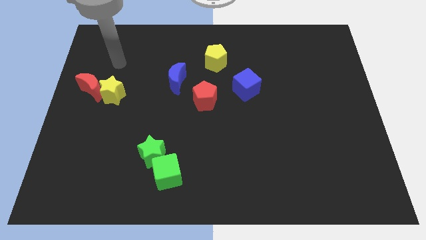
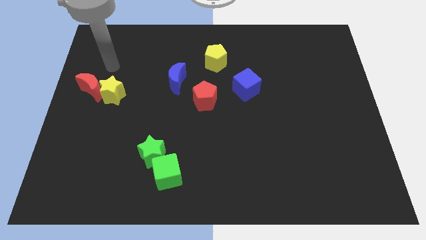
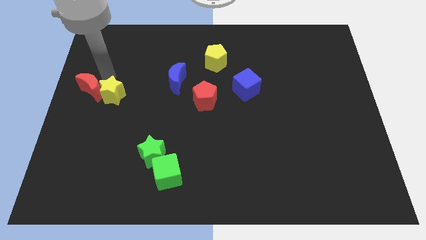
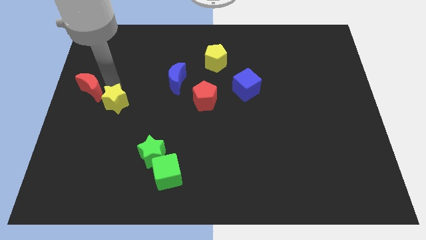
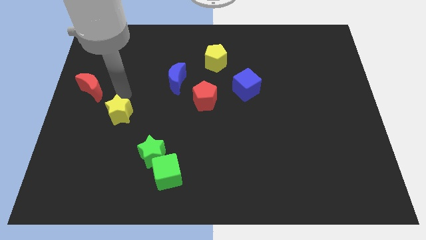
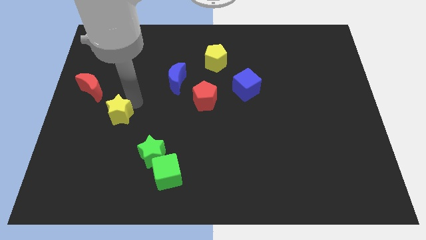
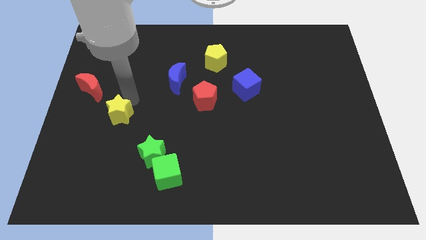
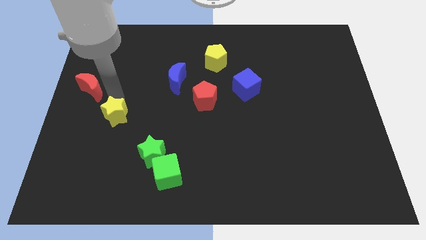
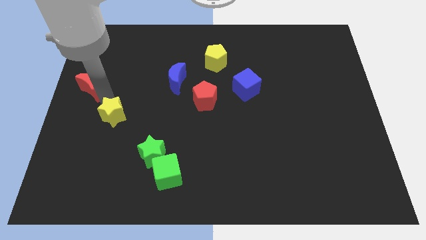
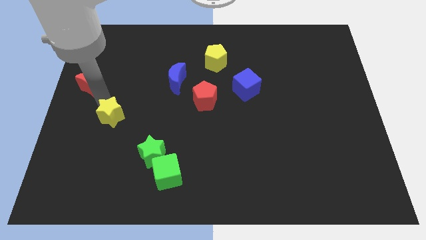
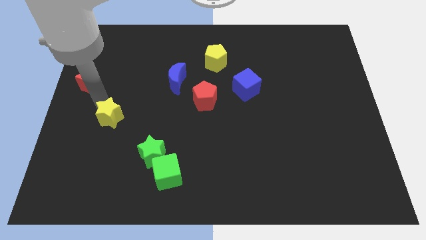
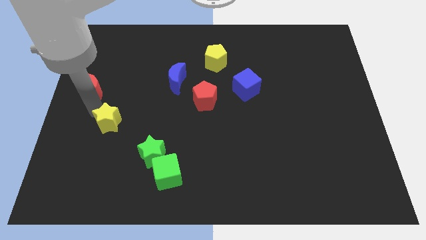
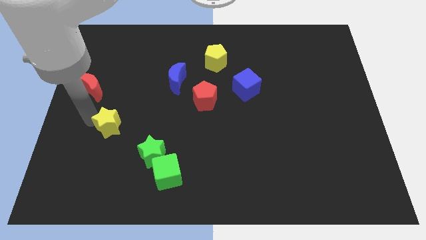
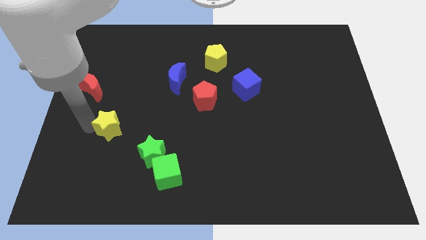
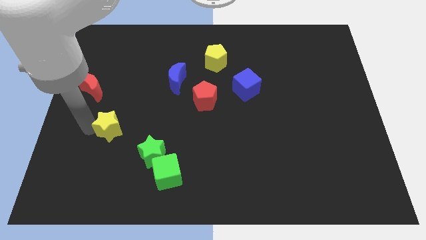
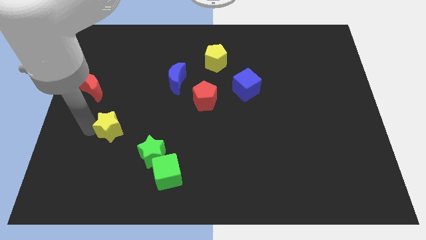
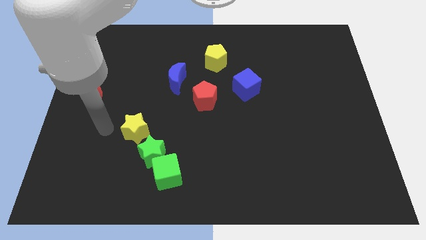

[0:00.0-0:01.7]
move the yellow star towards the green star

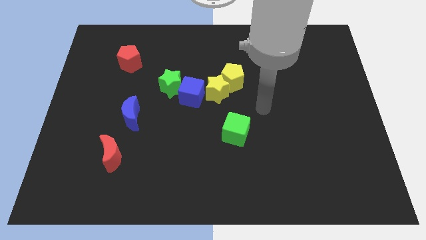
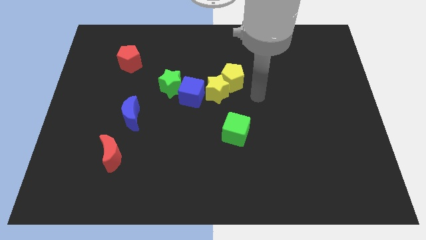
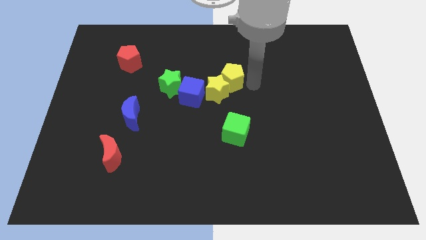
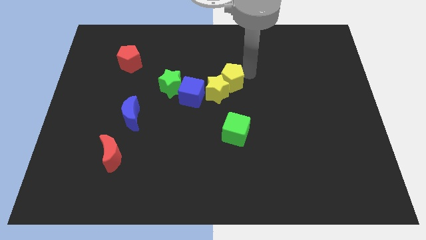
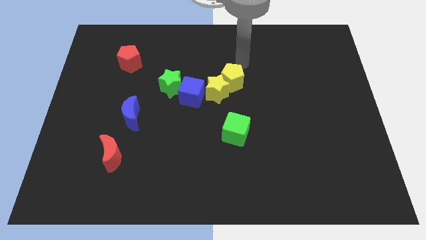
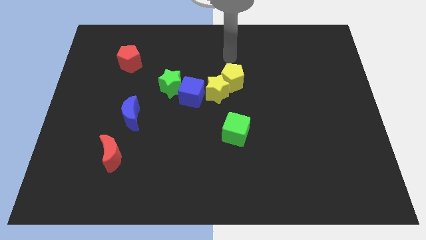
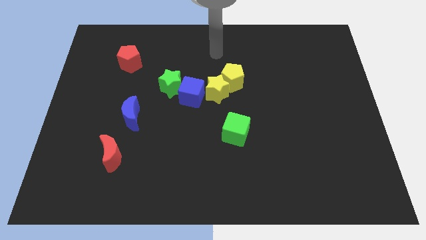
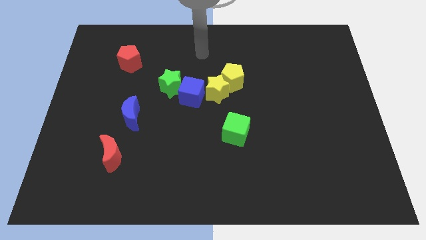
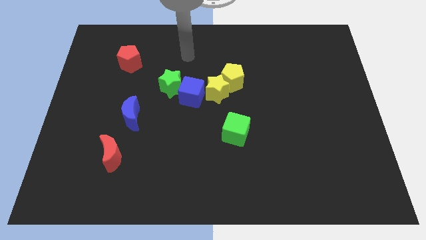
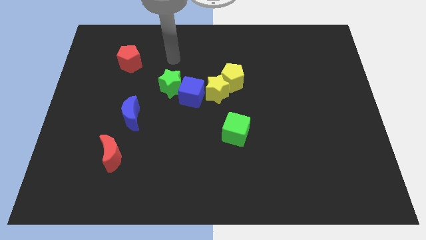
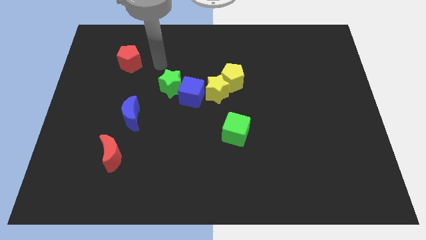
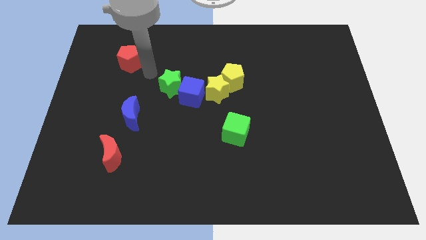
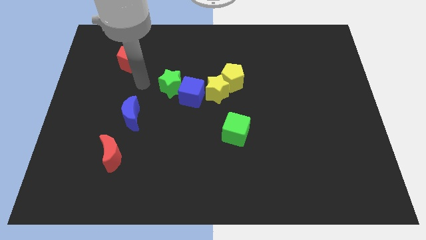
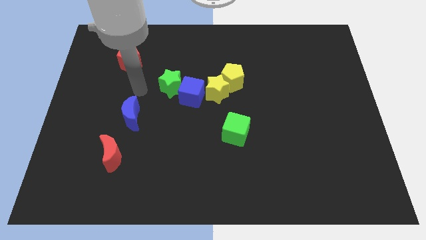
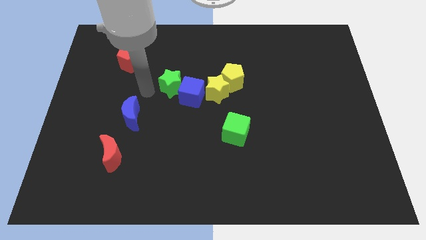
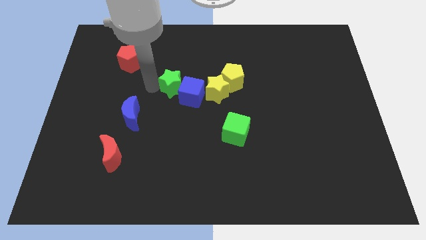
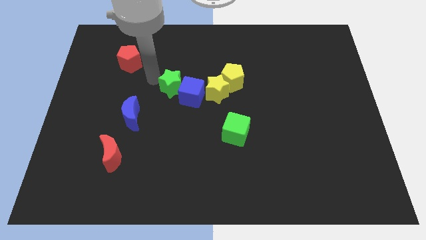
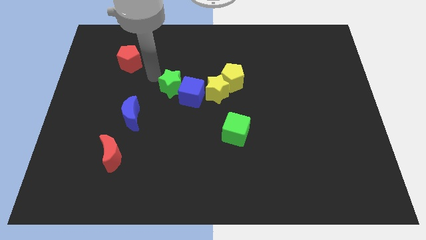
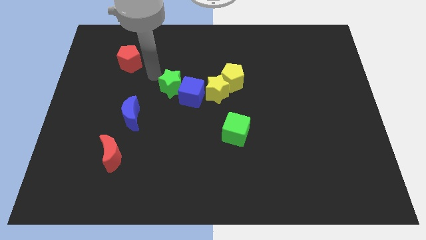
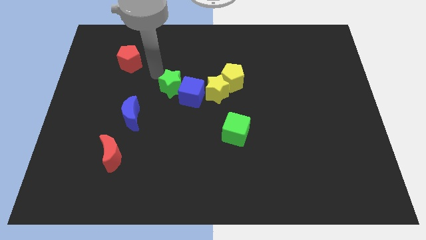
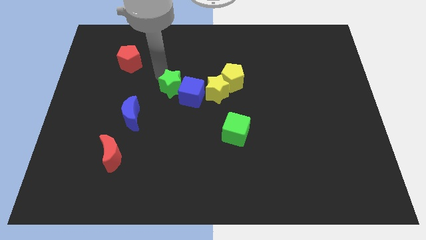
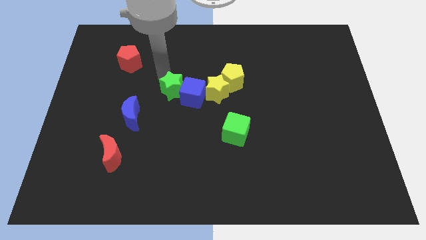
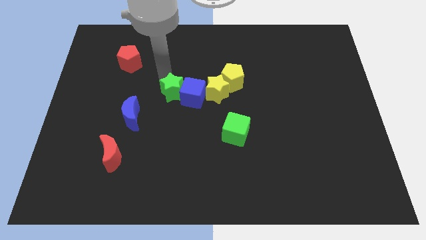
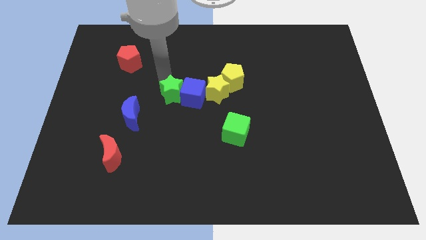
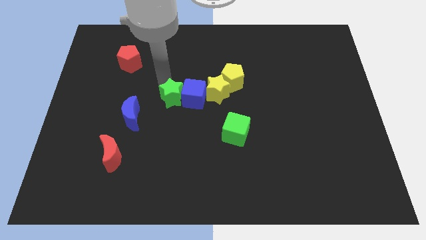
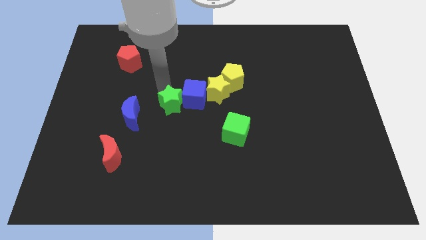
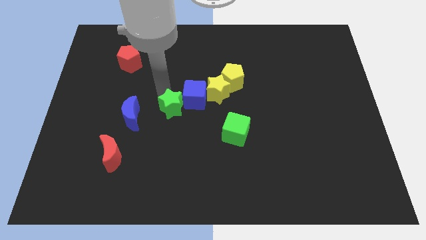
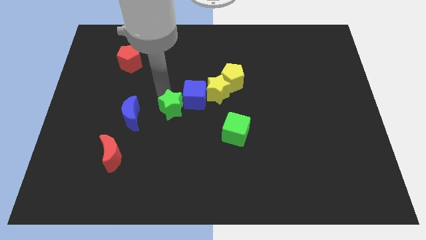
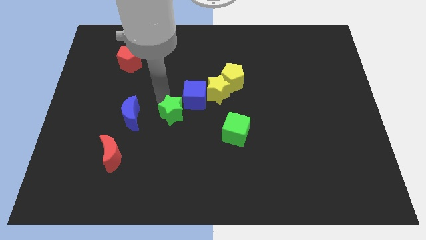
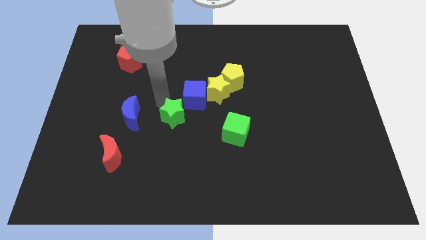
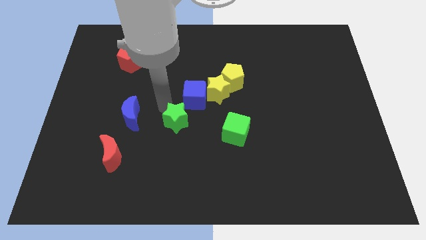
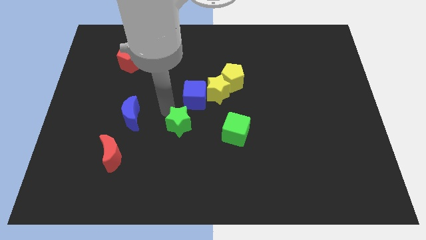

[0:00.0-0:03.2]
place the green star in between the green cube and blue moon

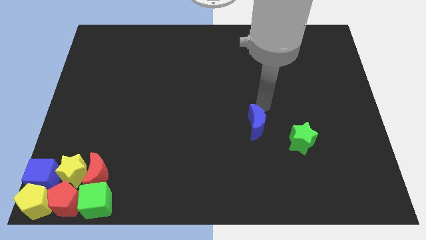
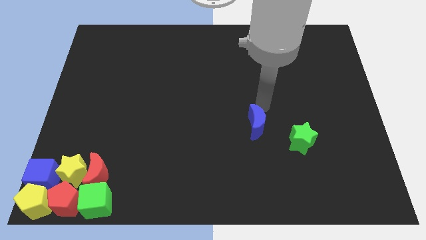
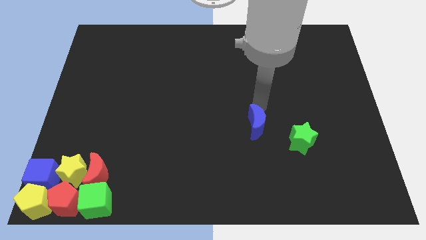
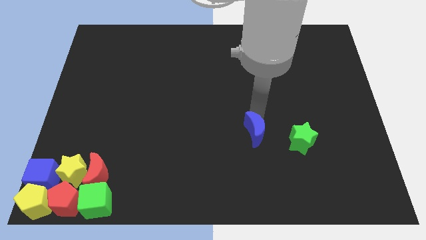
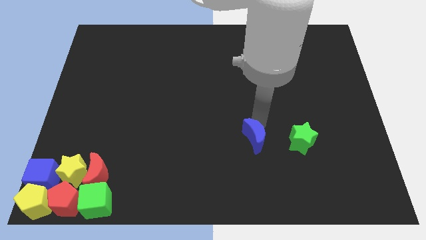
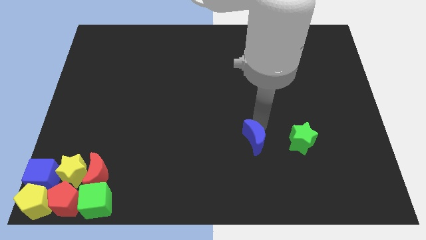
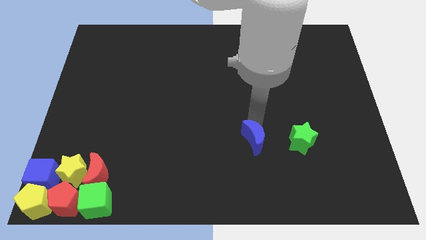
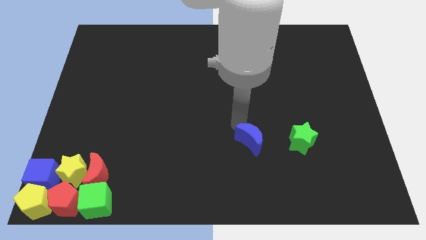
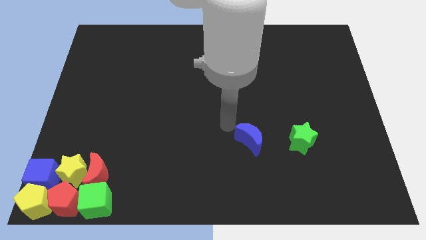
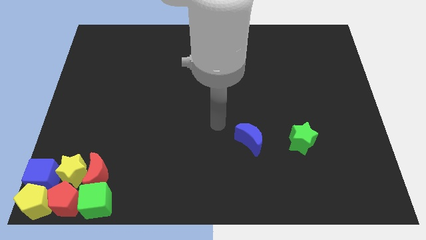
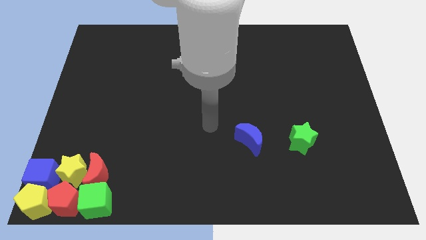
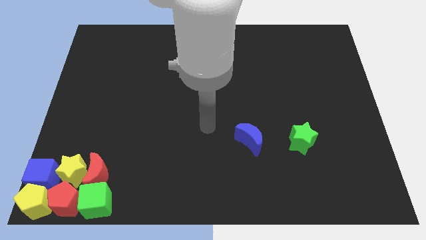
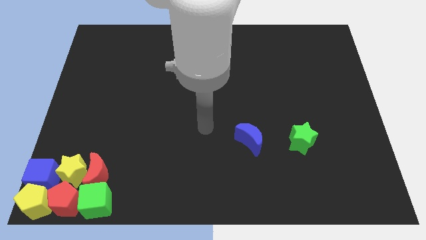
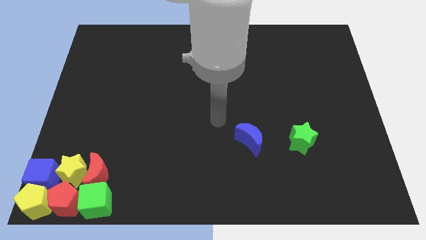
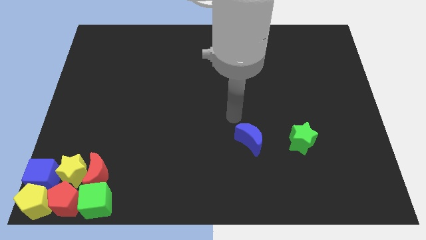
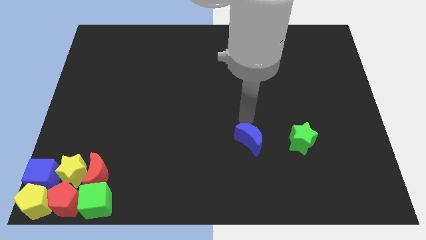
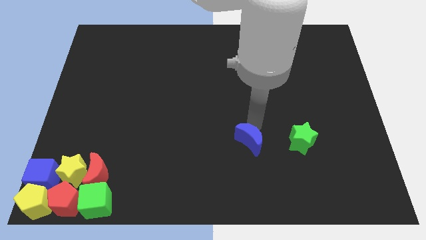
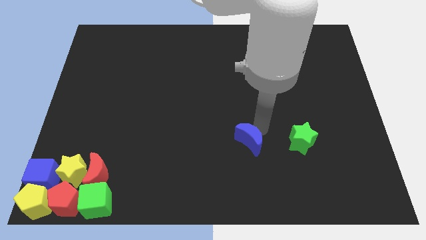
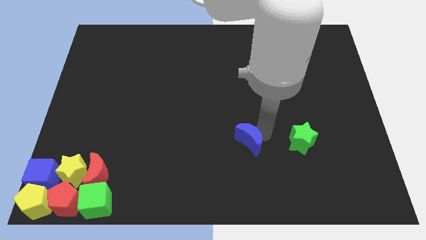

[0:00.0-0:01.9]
push the blue moon towards bottom center

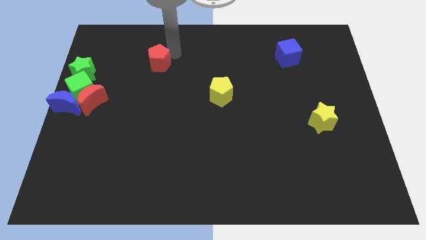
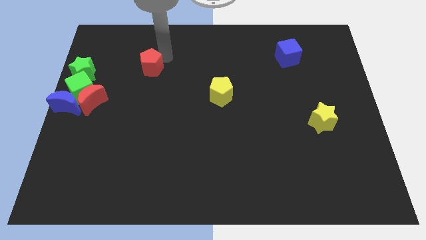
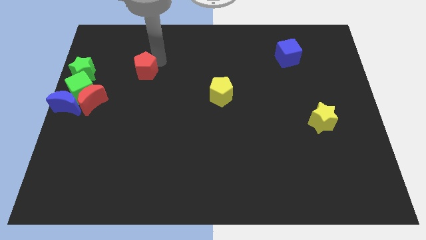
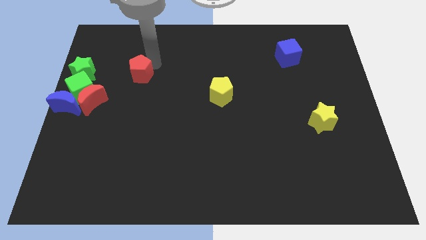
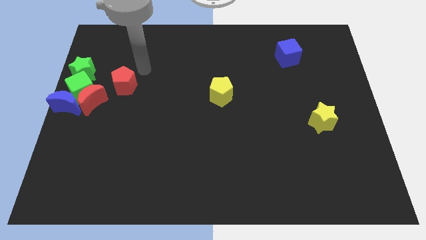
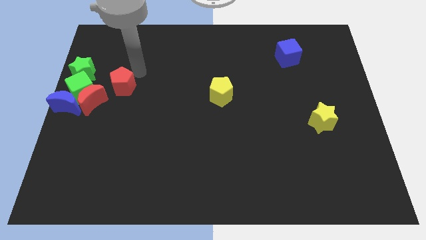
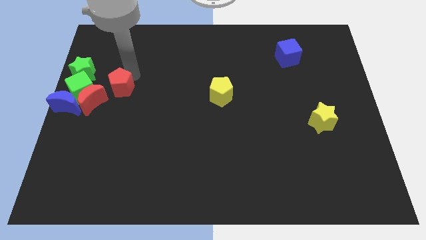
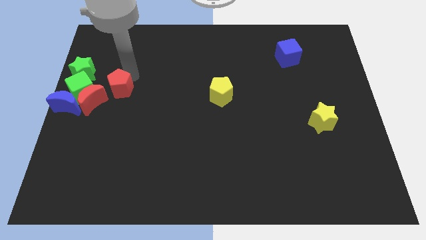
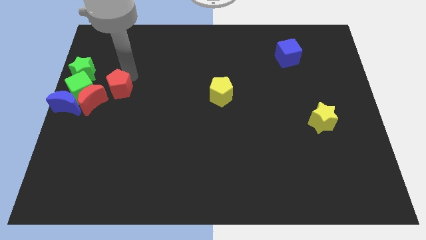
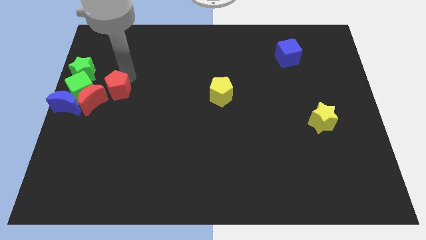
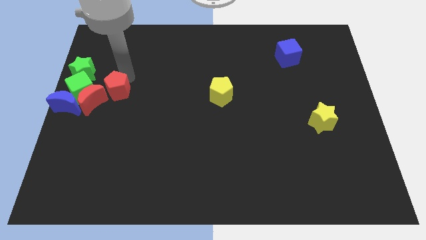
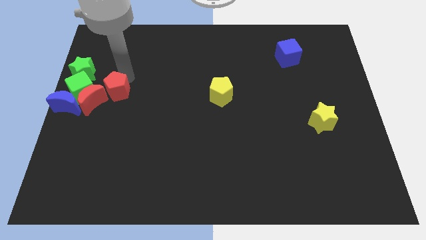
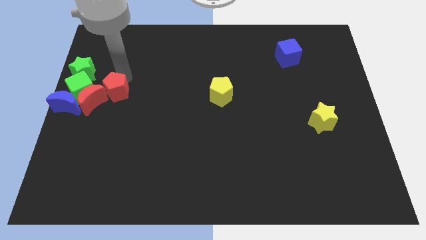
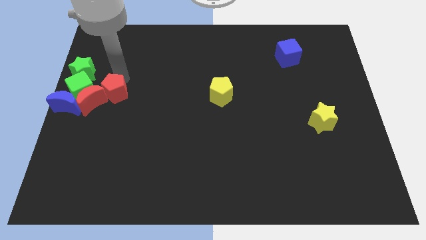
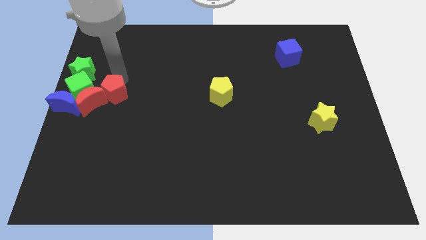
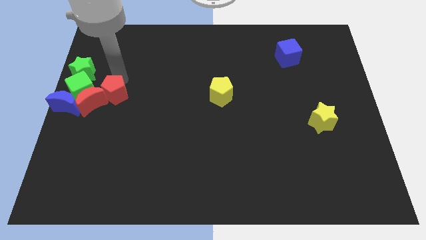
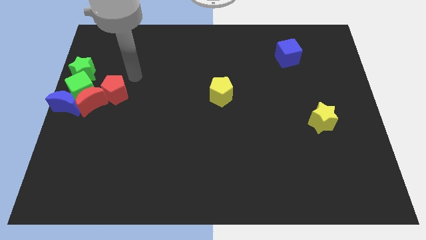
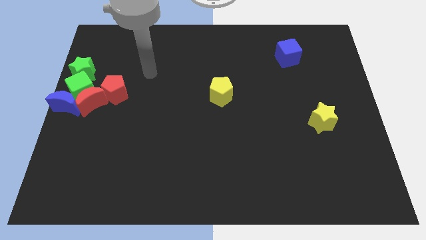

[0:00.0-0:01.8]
push the red pentagon into the top right of the red moon

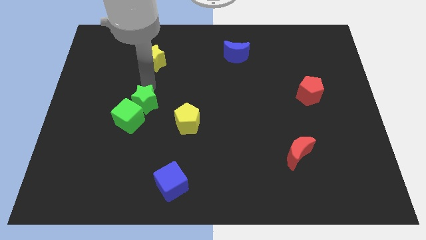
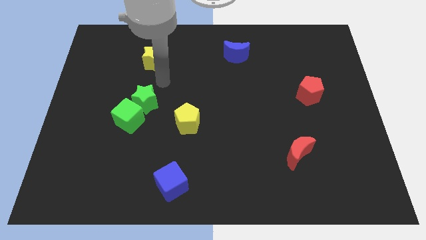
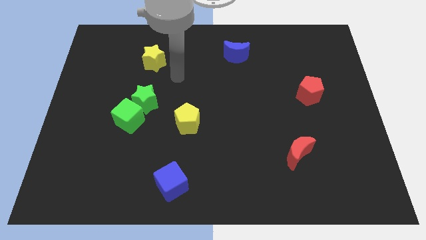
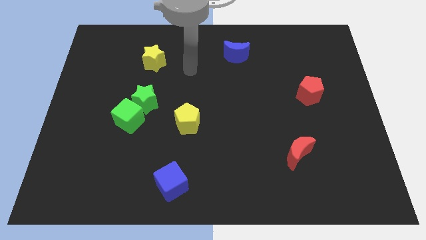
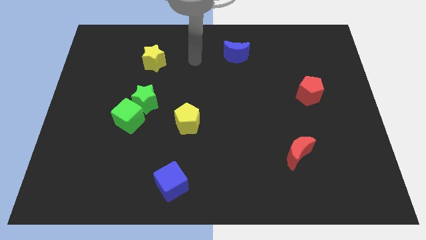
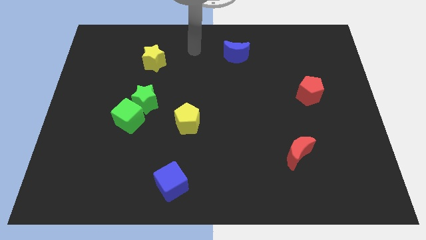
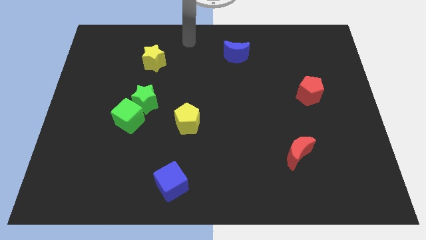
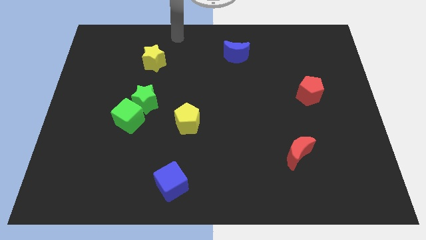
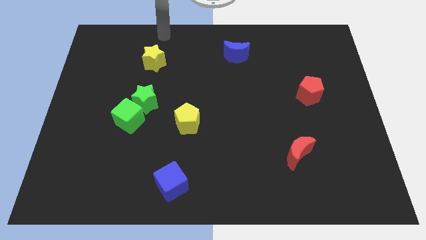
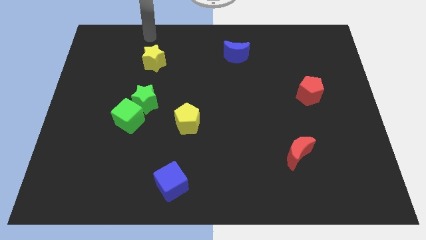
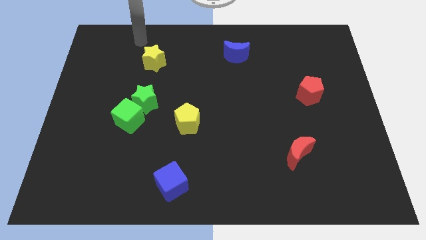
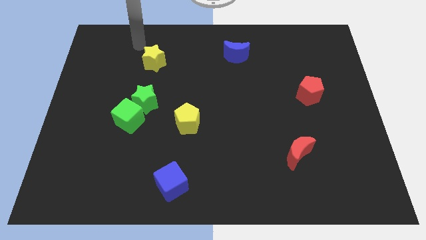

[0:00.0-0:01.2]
move your arm towards yellow star
